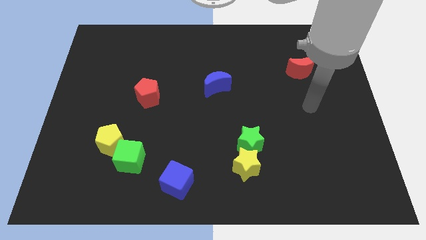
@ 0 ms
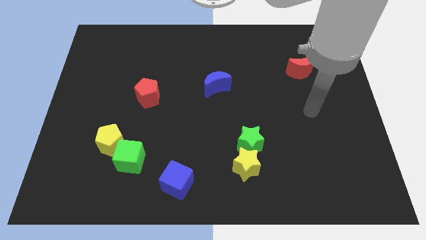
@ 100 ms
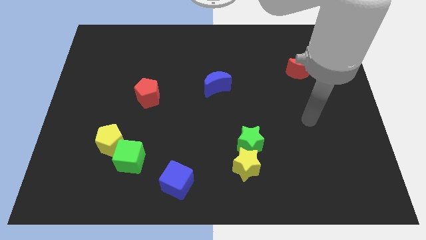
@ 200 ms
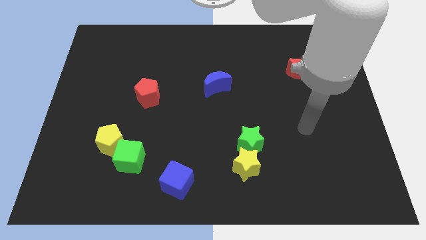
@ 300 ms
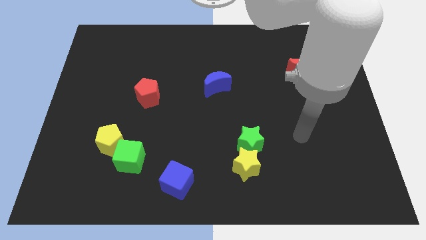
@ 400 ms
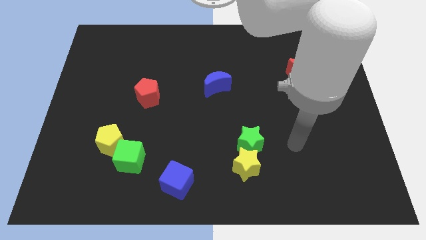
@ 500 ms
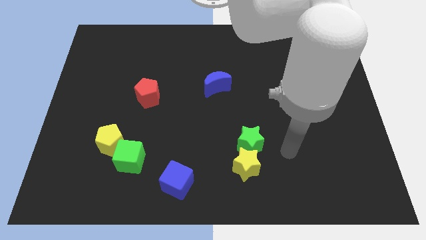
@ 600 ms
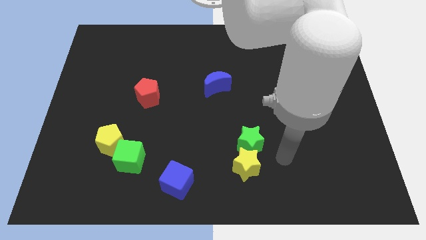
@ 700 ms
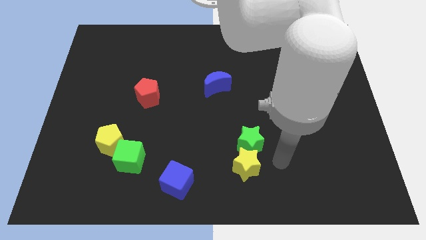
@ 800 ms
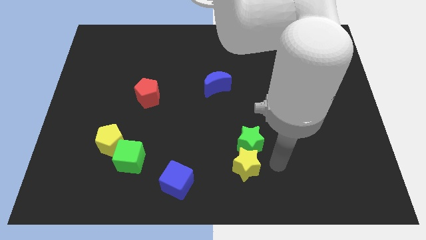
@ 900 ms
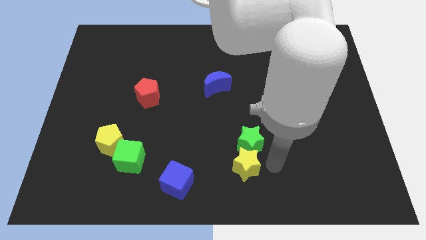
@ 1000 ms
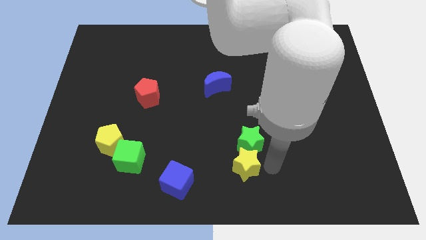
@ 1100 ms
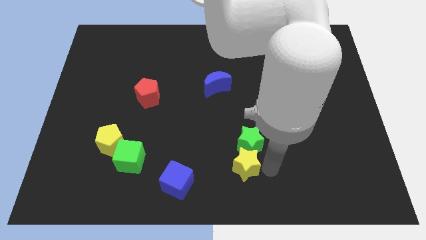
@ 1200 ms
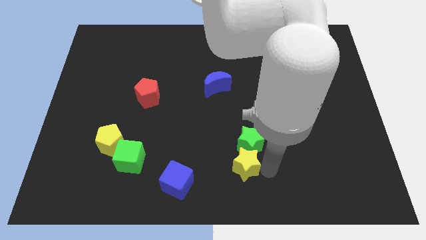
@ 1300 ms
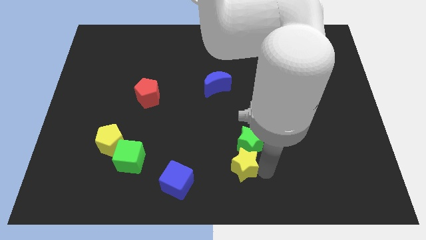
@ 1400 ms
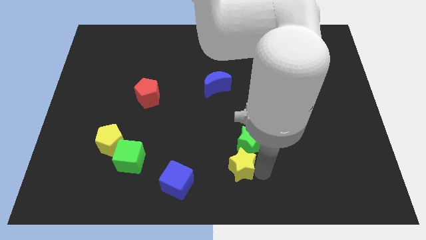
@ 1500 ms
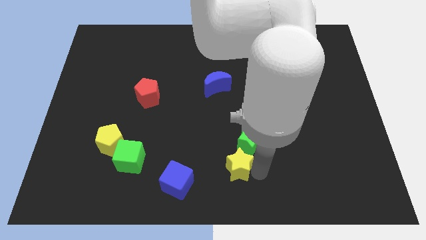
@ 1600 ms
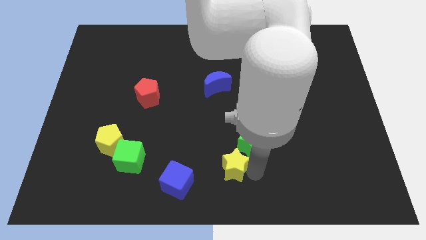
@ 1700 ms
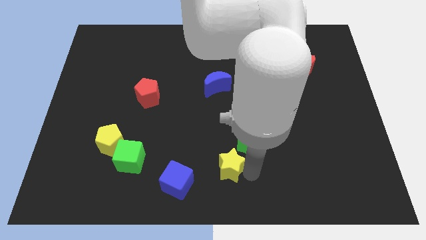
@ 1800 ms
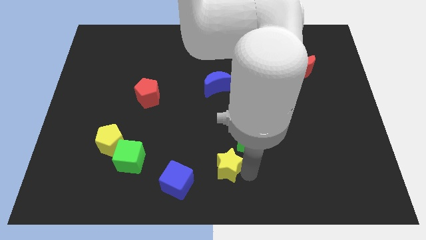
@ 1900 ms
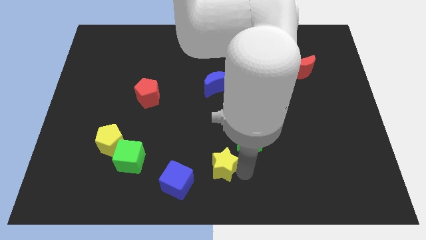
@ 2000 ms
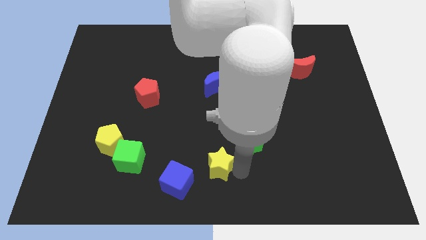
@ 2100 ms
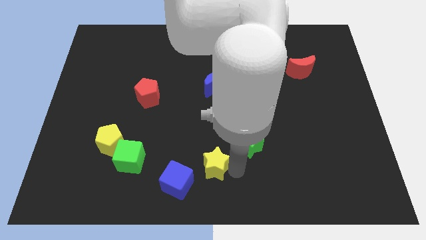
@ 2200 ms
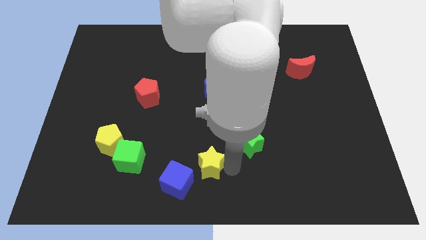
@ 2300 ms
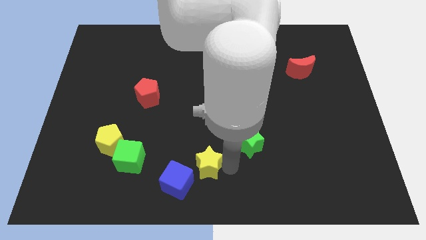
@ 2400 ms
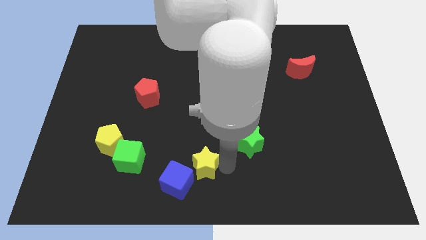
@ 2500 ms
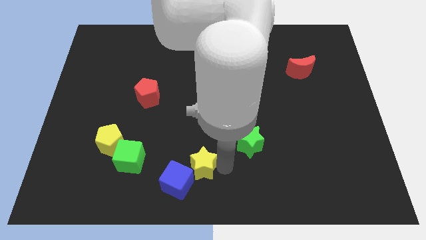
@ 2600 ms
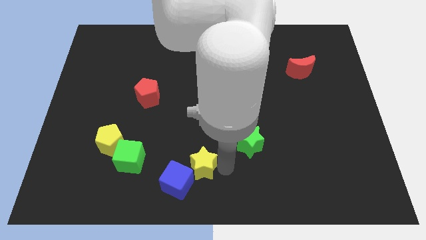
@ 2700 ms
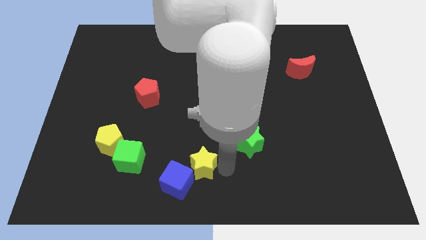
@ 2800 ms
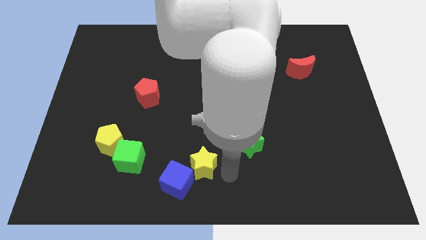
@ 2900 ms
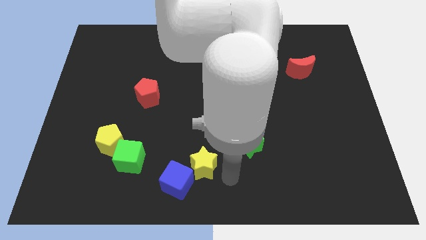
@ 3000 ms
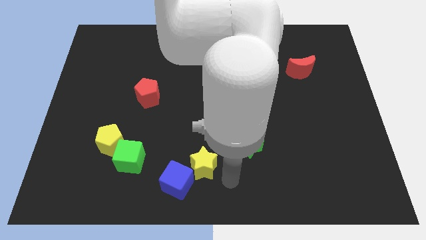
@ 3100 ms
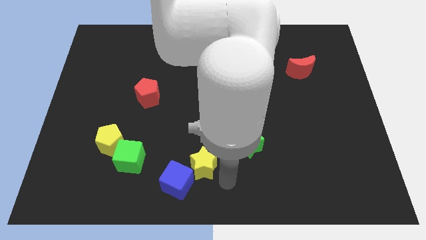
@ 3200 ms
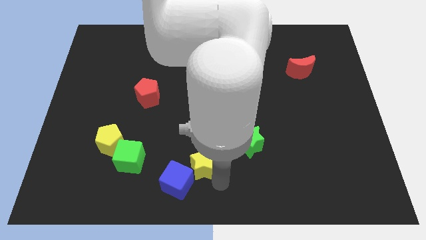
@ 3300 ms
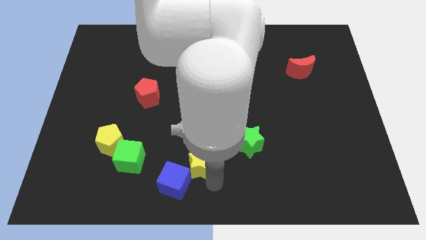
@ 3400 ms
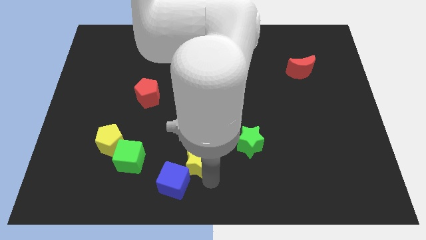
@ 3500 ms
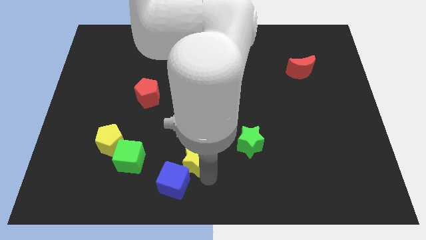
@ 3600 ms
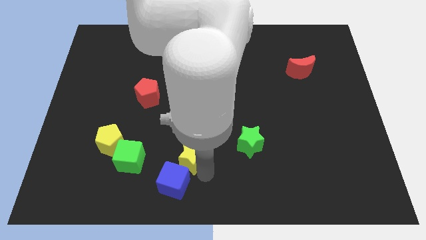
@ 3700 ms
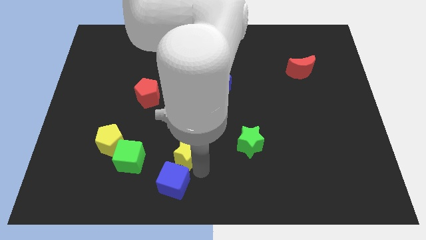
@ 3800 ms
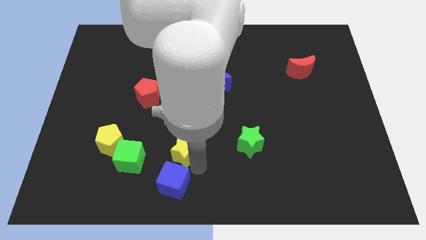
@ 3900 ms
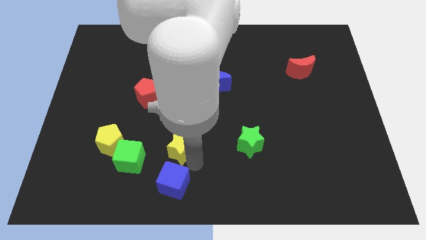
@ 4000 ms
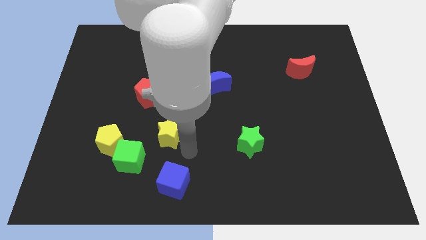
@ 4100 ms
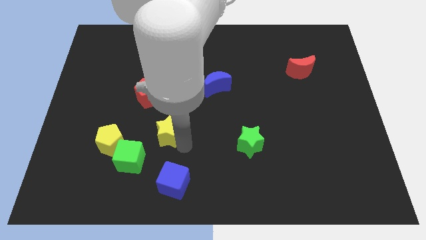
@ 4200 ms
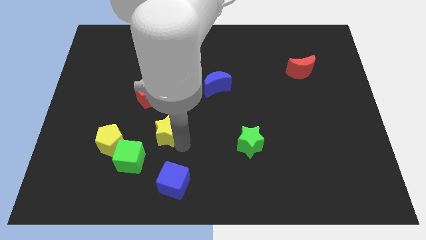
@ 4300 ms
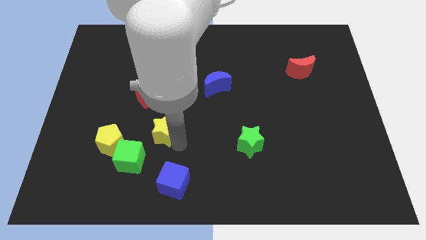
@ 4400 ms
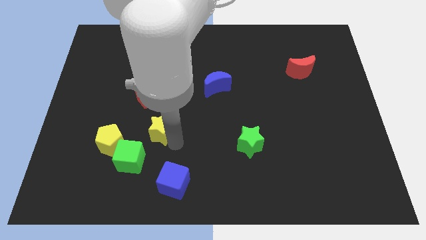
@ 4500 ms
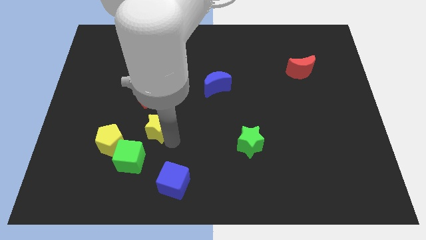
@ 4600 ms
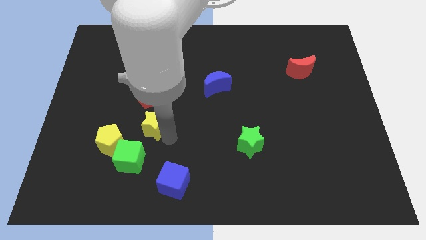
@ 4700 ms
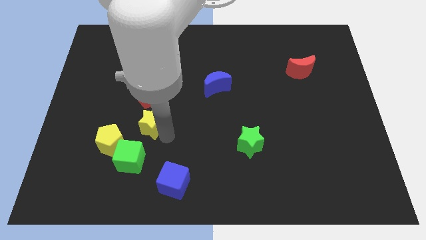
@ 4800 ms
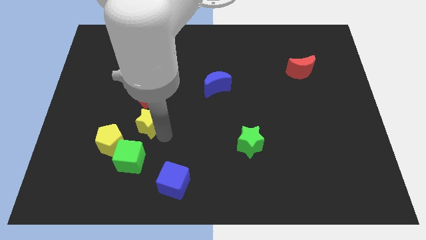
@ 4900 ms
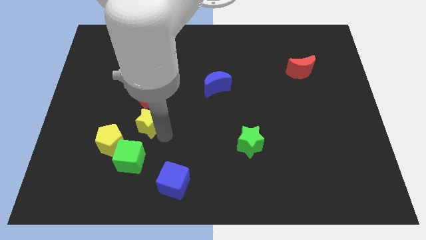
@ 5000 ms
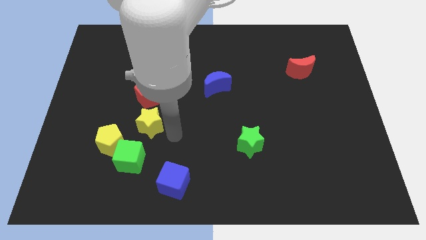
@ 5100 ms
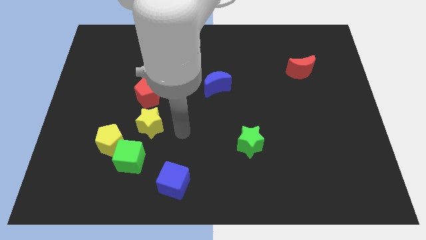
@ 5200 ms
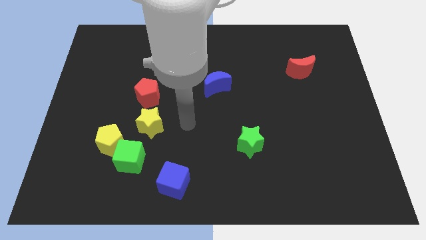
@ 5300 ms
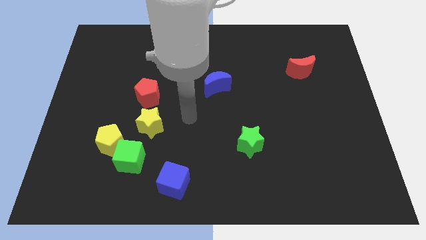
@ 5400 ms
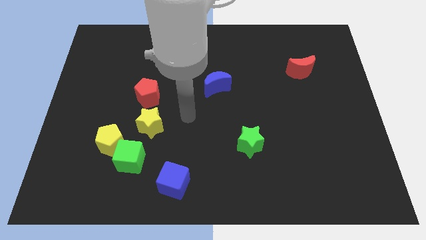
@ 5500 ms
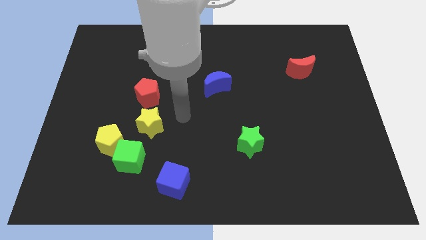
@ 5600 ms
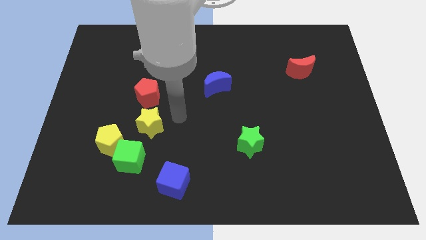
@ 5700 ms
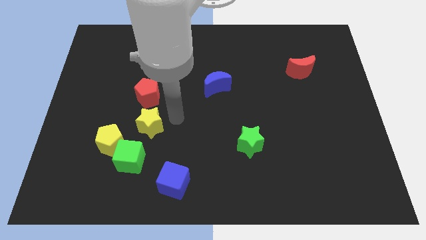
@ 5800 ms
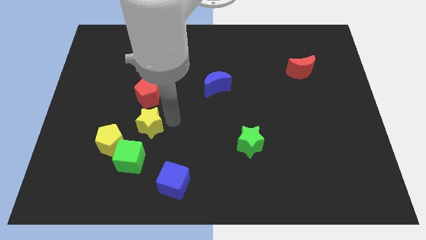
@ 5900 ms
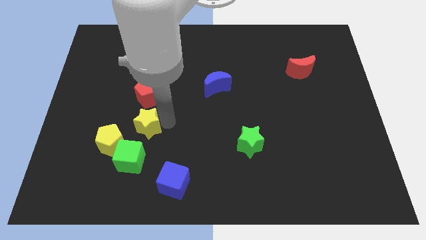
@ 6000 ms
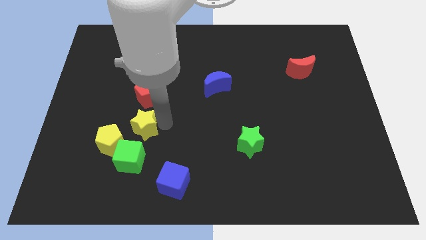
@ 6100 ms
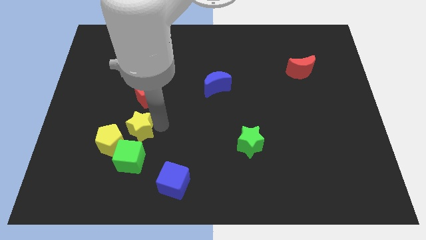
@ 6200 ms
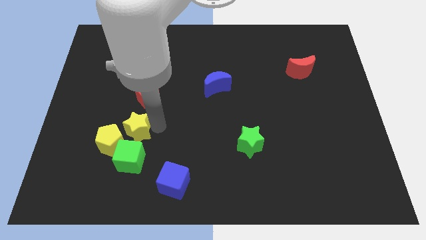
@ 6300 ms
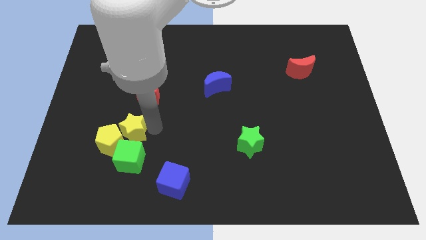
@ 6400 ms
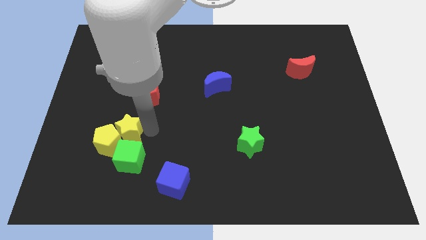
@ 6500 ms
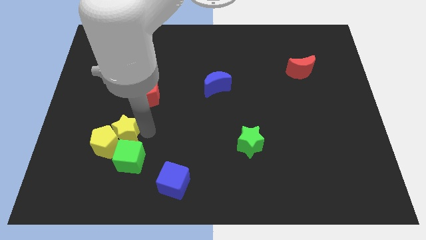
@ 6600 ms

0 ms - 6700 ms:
push the yellow star close to the yellow pentagon

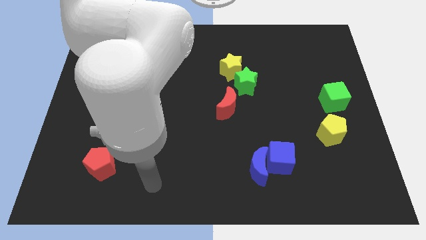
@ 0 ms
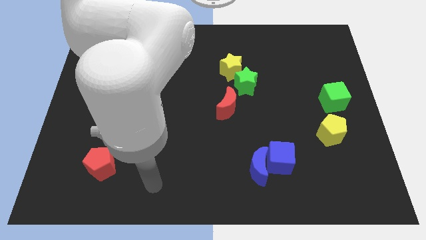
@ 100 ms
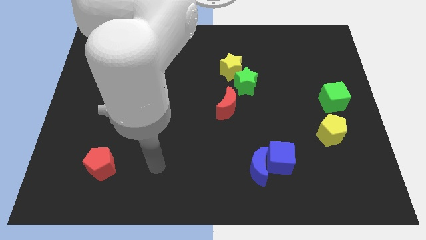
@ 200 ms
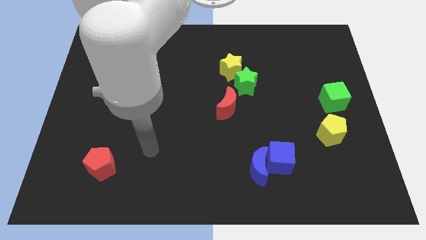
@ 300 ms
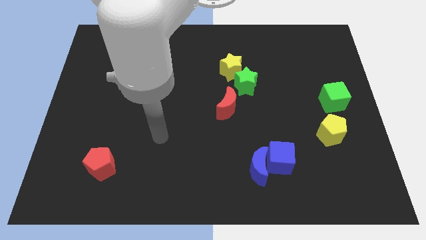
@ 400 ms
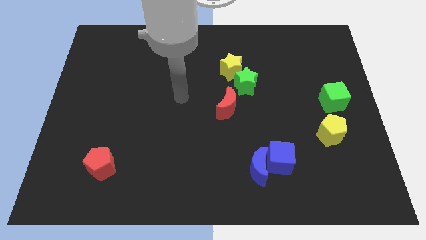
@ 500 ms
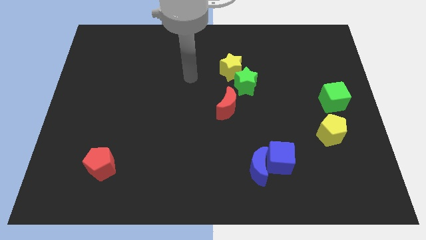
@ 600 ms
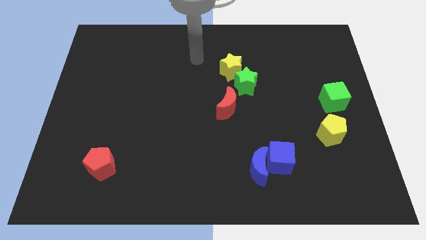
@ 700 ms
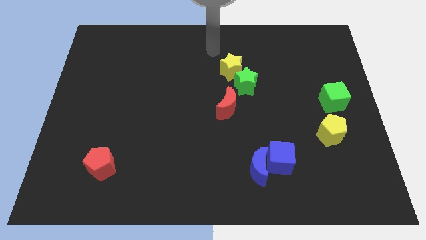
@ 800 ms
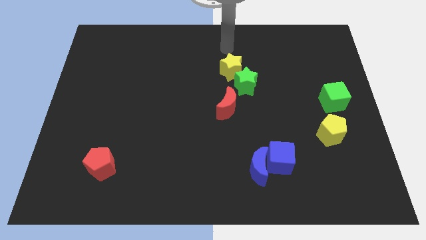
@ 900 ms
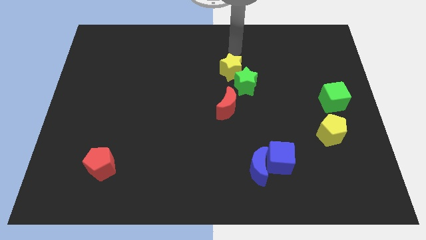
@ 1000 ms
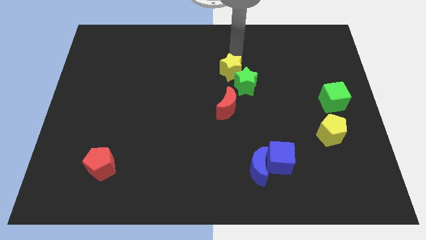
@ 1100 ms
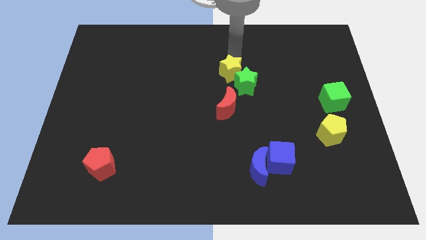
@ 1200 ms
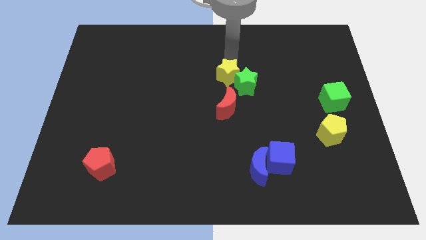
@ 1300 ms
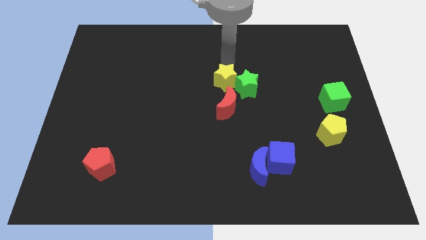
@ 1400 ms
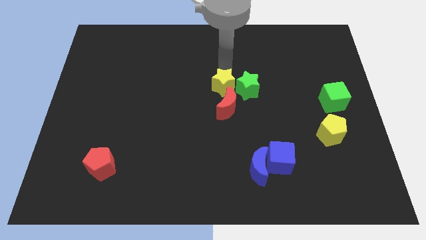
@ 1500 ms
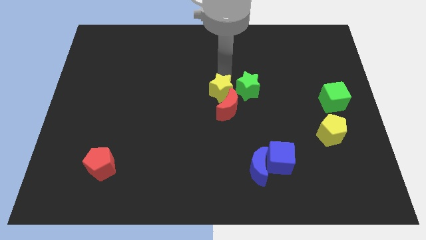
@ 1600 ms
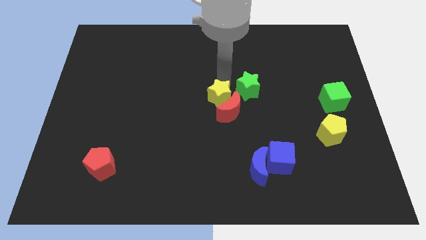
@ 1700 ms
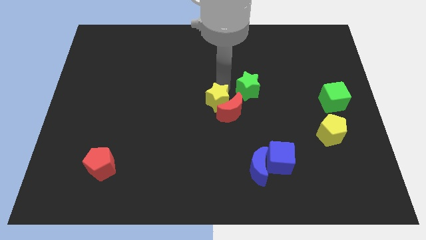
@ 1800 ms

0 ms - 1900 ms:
slide the yellow star close to the red moon
